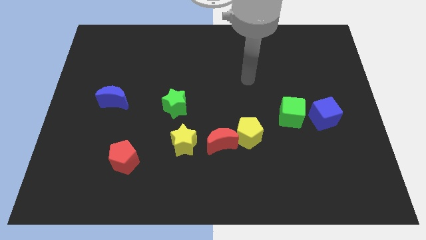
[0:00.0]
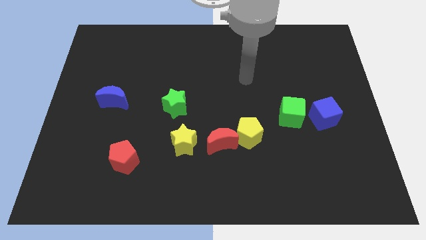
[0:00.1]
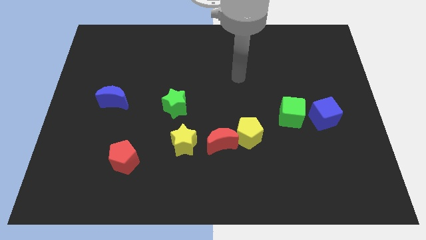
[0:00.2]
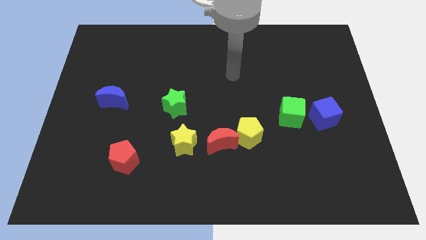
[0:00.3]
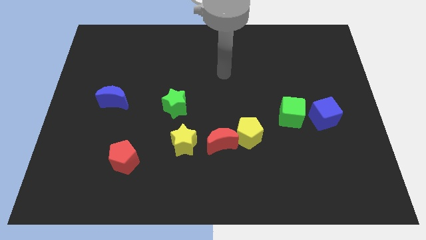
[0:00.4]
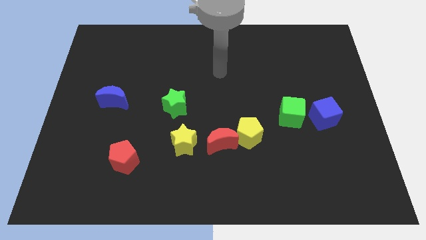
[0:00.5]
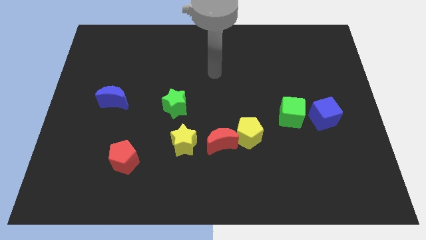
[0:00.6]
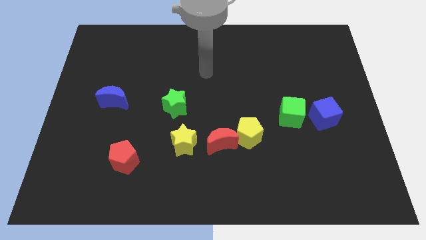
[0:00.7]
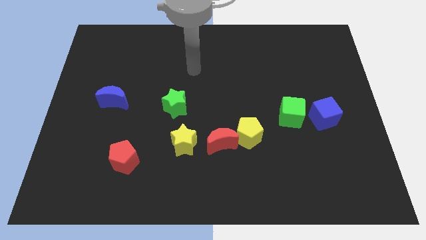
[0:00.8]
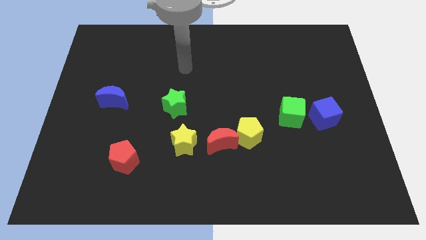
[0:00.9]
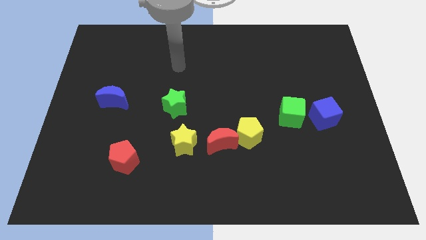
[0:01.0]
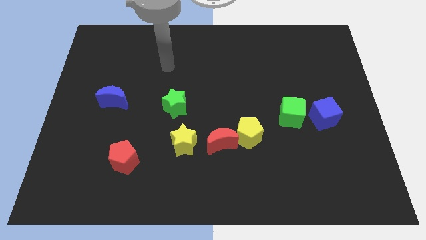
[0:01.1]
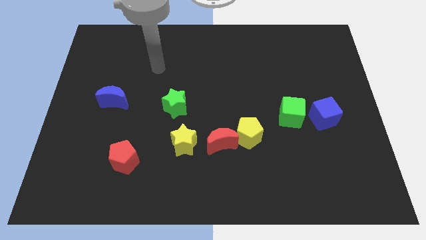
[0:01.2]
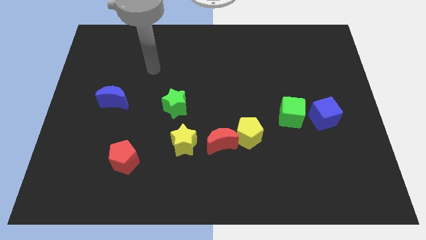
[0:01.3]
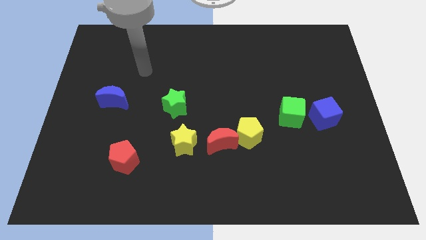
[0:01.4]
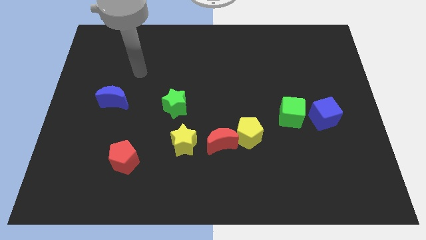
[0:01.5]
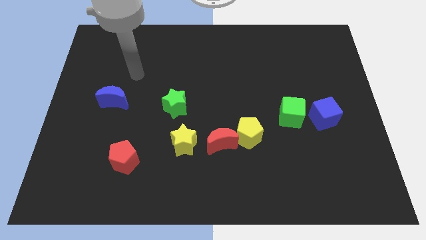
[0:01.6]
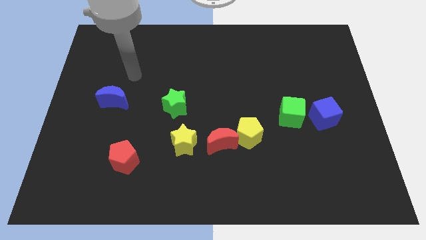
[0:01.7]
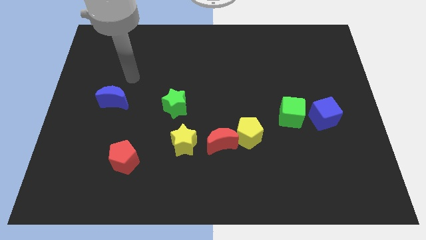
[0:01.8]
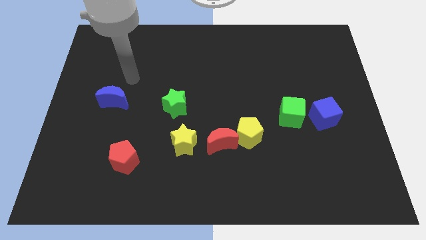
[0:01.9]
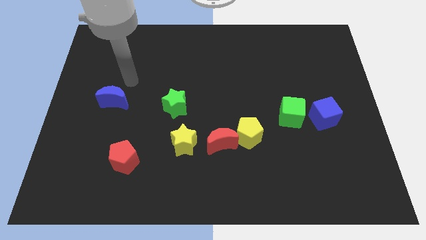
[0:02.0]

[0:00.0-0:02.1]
slide your arm to the top right of blue moon

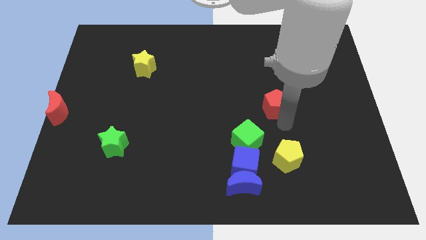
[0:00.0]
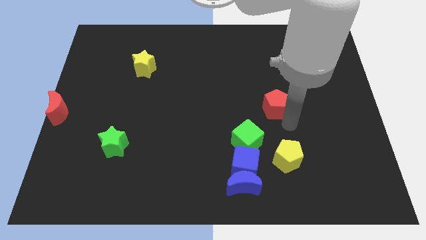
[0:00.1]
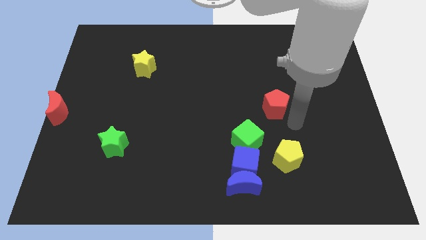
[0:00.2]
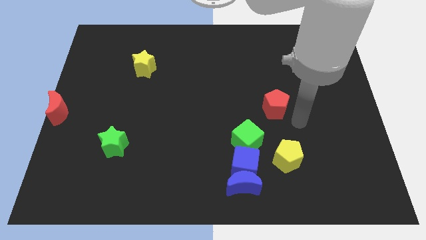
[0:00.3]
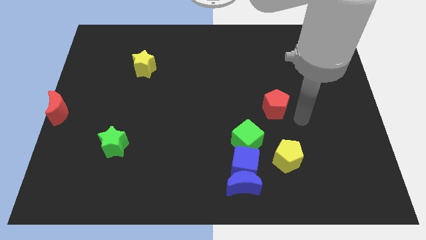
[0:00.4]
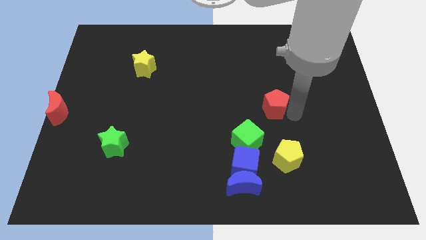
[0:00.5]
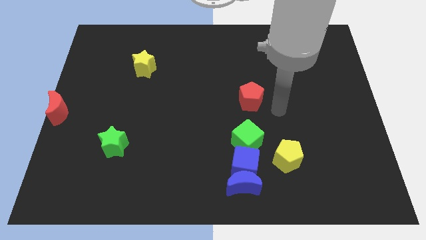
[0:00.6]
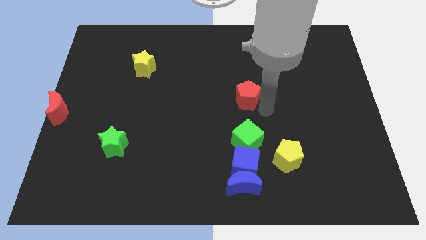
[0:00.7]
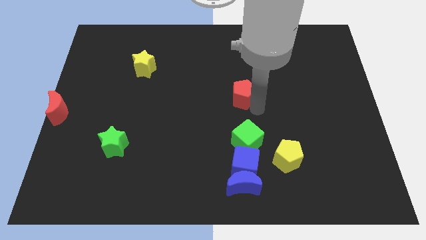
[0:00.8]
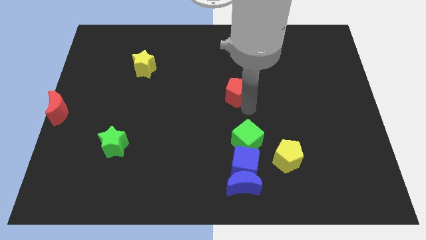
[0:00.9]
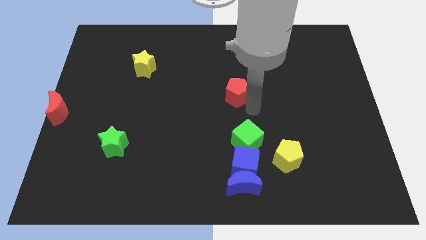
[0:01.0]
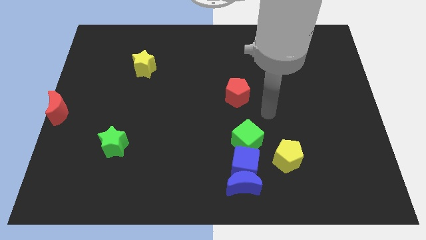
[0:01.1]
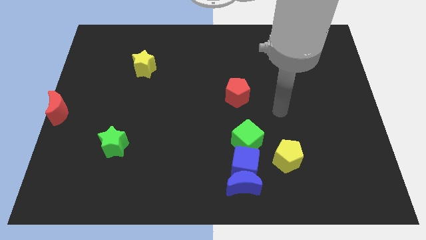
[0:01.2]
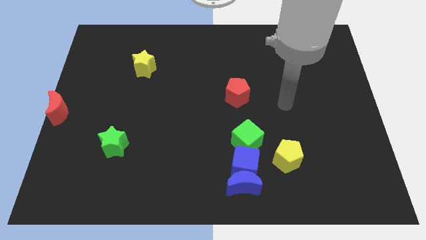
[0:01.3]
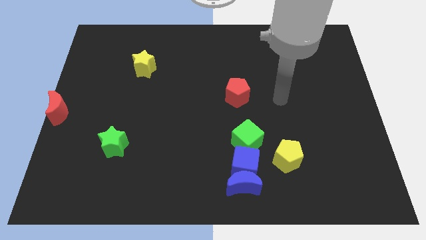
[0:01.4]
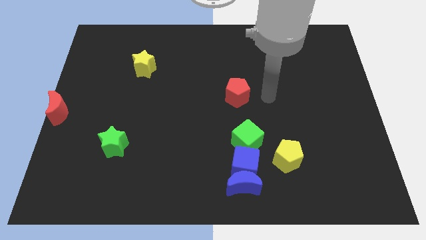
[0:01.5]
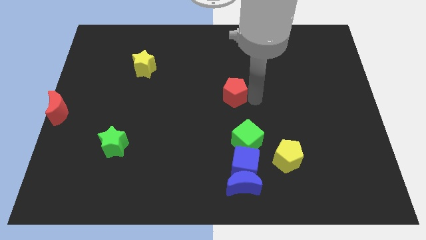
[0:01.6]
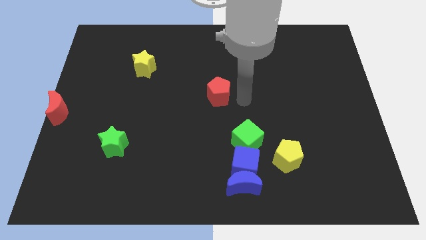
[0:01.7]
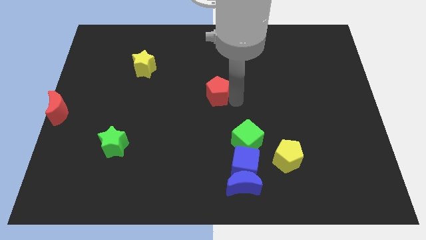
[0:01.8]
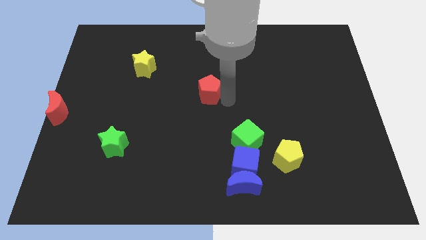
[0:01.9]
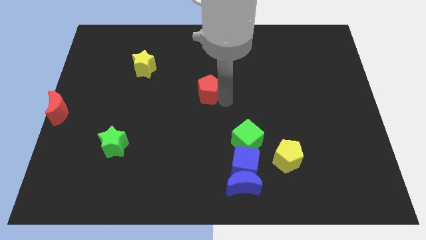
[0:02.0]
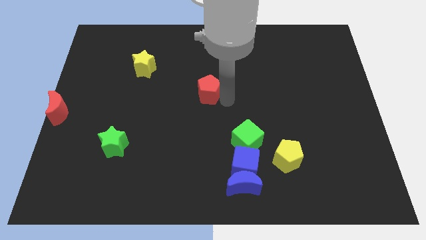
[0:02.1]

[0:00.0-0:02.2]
push the red pentagon towards the left

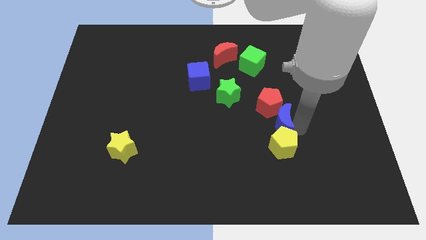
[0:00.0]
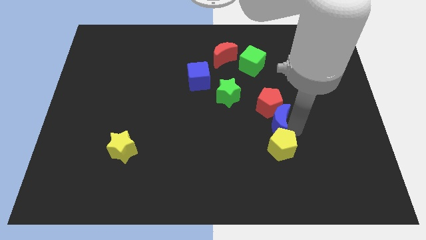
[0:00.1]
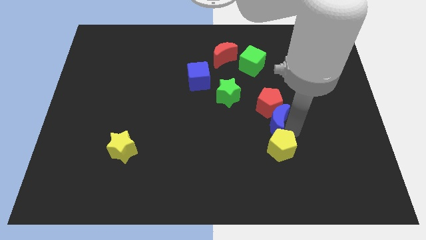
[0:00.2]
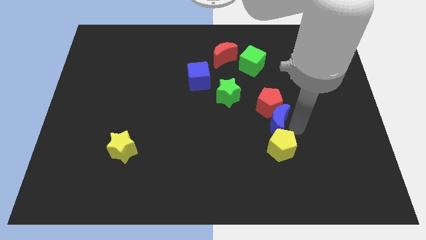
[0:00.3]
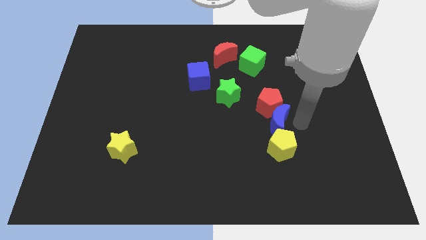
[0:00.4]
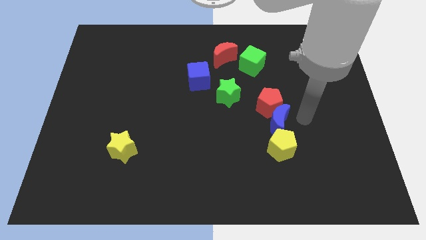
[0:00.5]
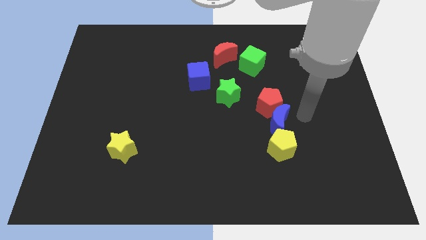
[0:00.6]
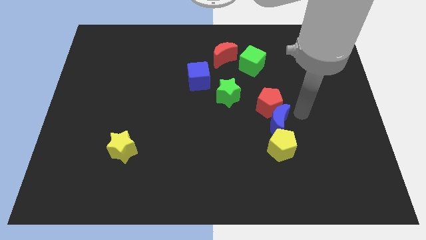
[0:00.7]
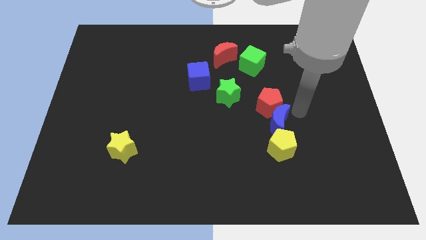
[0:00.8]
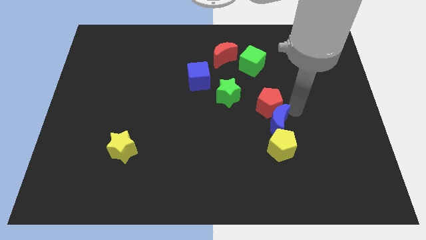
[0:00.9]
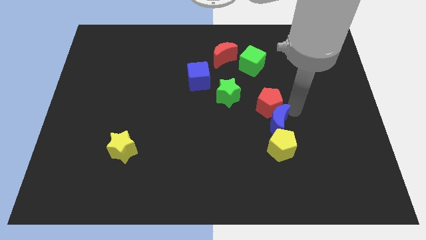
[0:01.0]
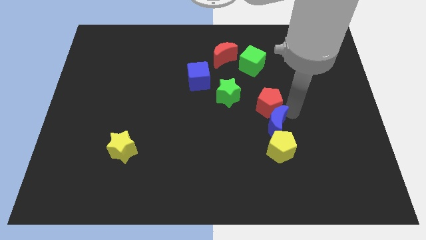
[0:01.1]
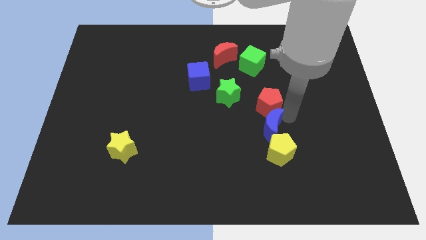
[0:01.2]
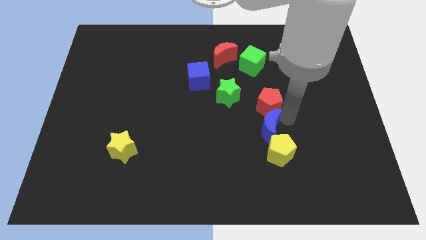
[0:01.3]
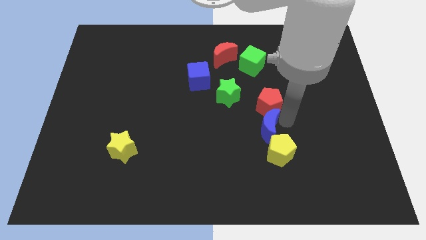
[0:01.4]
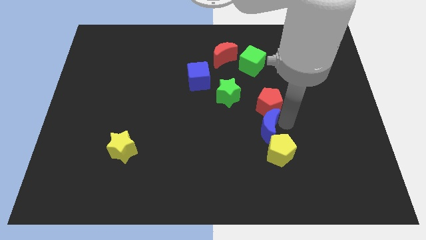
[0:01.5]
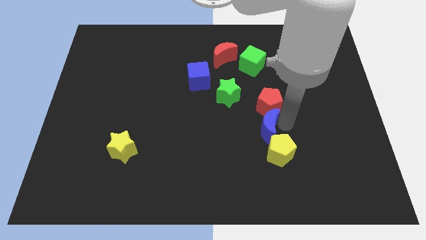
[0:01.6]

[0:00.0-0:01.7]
slide the blue crescent in between the red pentagon and the yellow pentagon

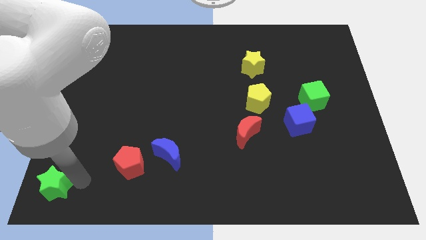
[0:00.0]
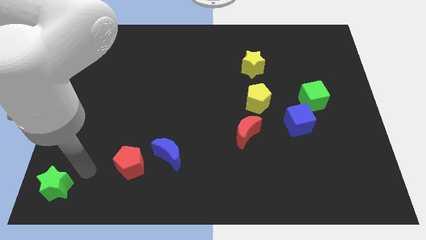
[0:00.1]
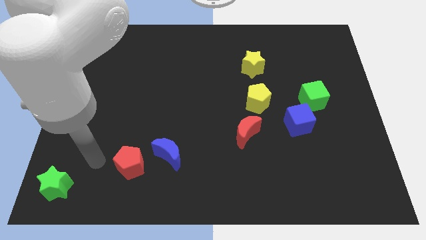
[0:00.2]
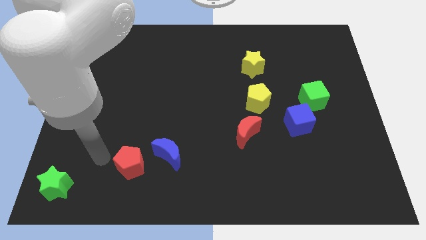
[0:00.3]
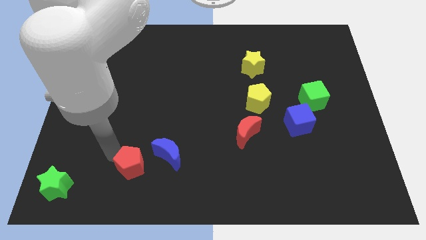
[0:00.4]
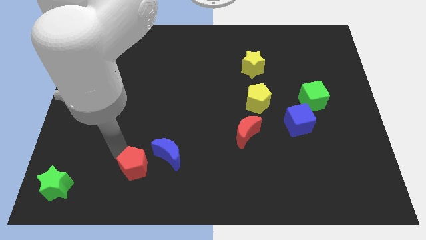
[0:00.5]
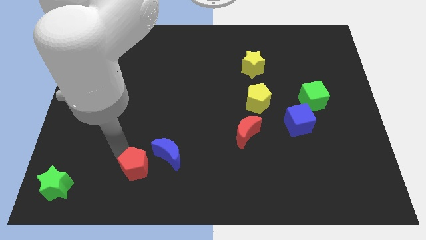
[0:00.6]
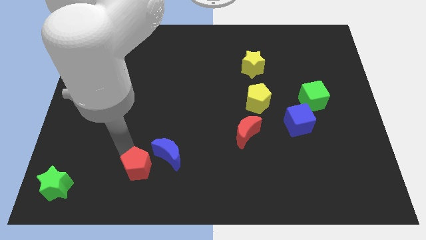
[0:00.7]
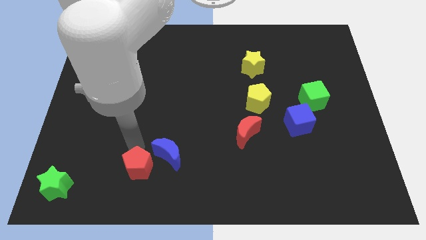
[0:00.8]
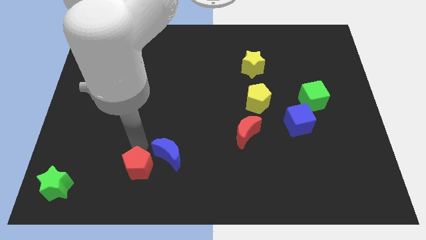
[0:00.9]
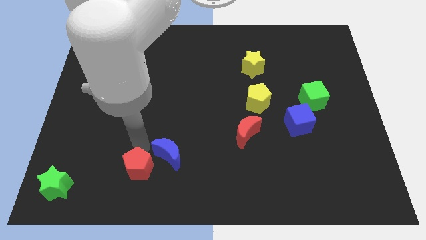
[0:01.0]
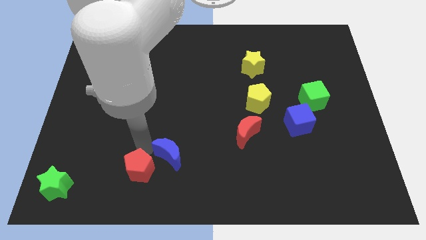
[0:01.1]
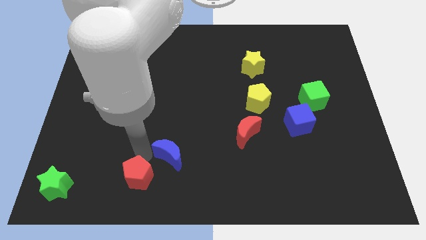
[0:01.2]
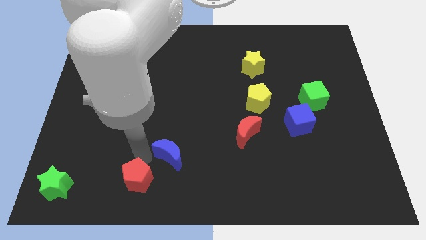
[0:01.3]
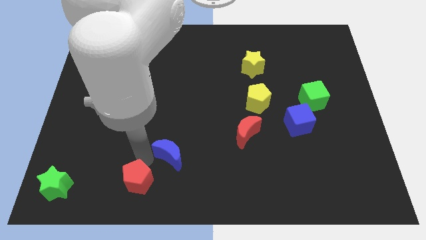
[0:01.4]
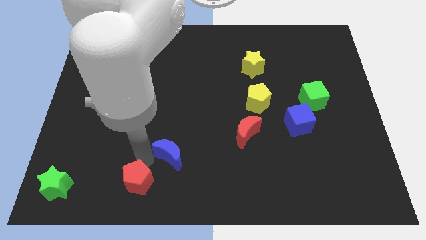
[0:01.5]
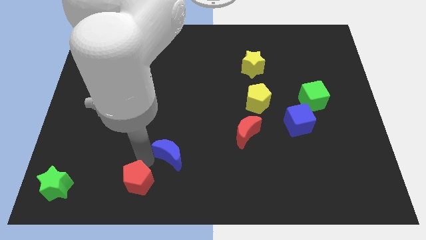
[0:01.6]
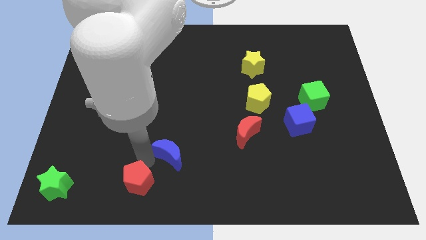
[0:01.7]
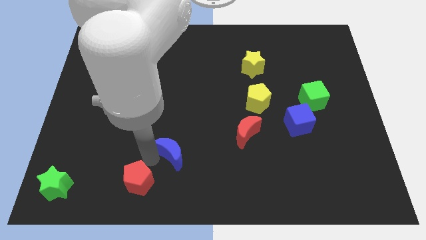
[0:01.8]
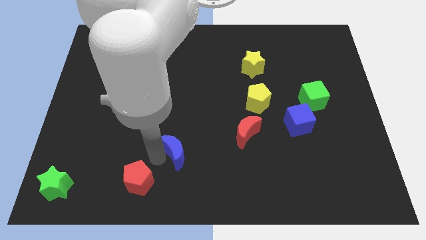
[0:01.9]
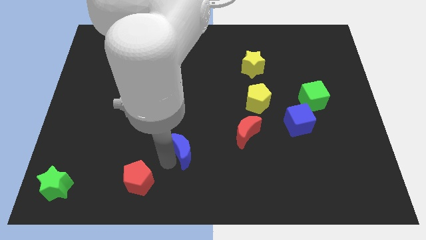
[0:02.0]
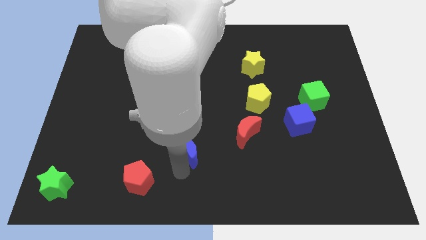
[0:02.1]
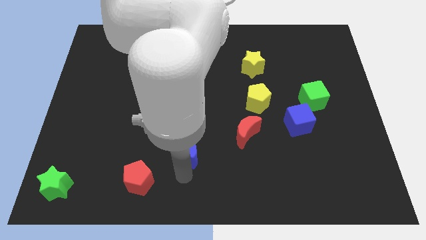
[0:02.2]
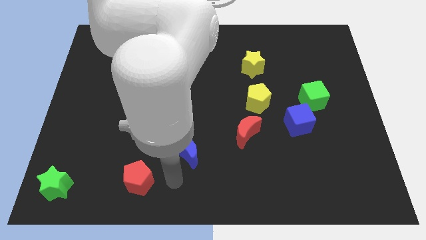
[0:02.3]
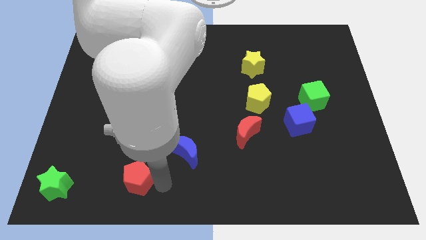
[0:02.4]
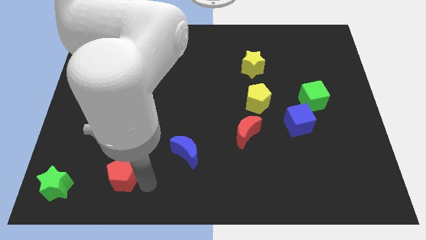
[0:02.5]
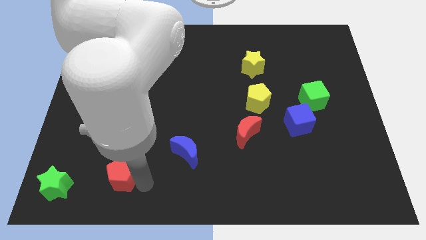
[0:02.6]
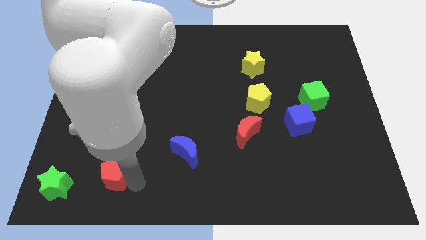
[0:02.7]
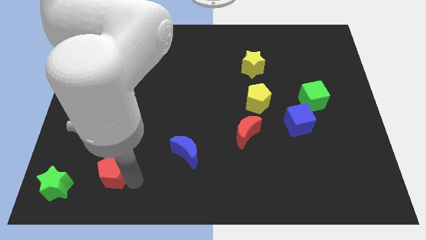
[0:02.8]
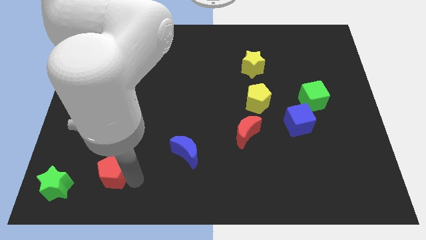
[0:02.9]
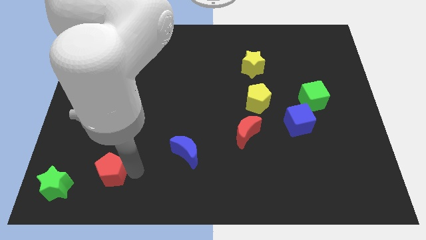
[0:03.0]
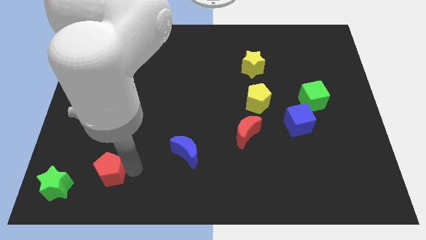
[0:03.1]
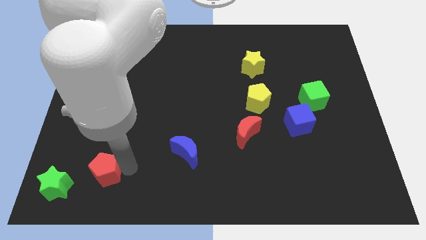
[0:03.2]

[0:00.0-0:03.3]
push the red pentagon vertical to the green star
